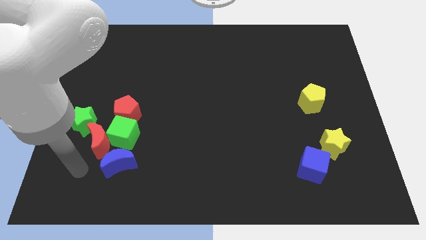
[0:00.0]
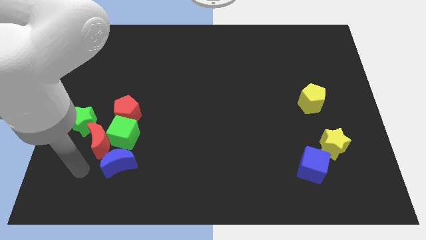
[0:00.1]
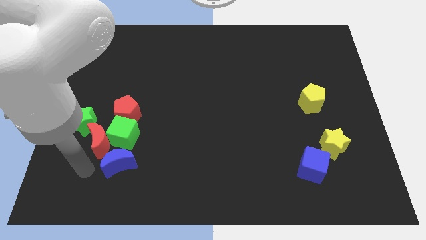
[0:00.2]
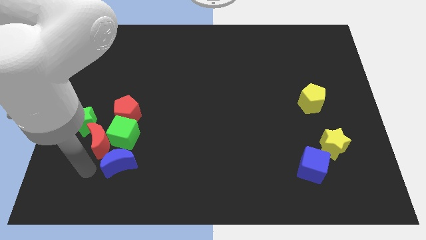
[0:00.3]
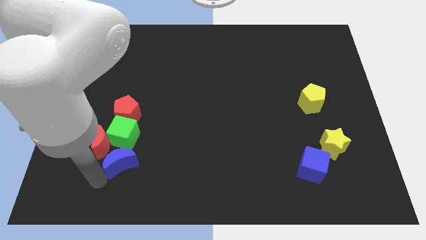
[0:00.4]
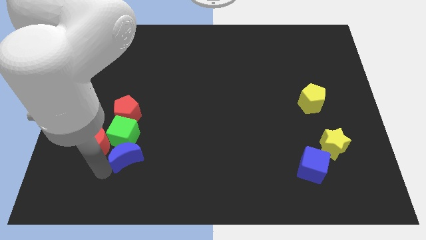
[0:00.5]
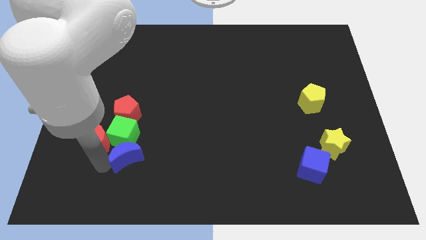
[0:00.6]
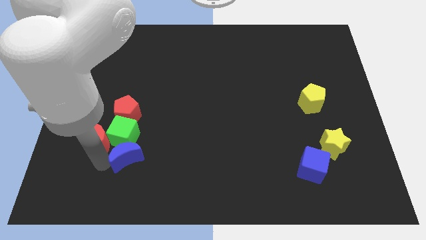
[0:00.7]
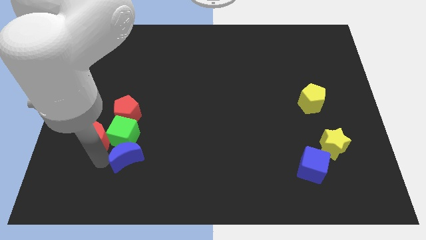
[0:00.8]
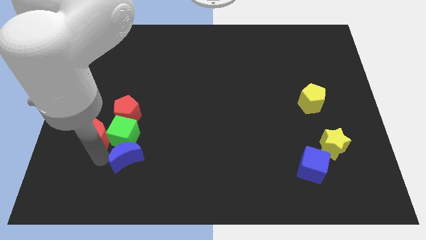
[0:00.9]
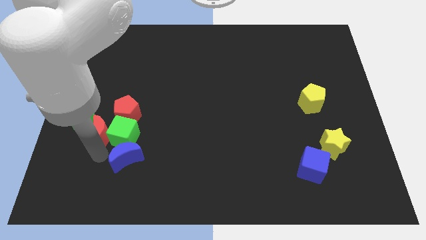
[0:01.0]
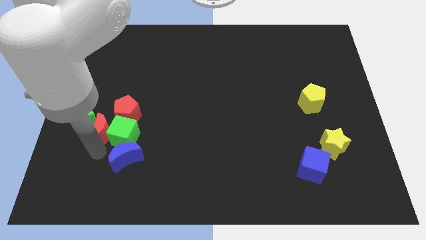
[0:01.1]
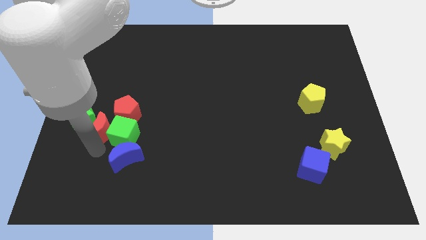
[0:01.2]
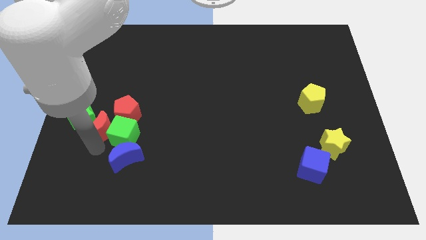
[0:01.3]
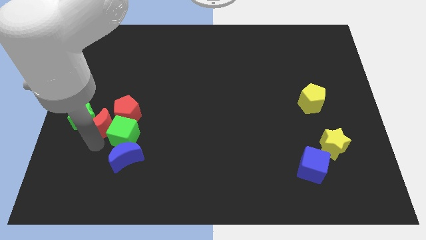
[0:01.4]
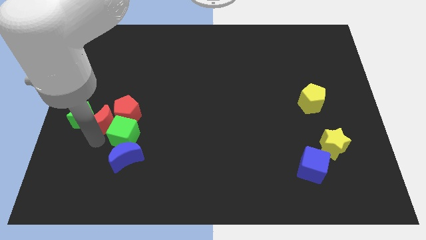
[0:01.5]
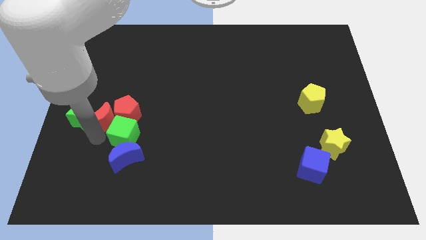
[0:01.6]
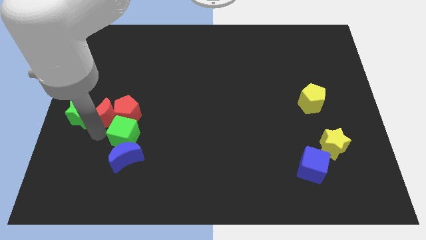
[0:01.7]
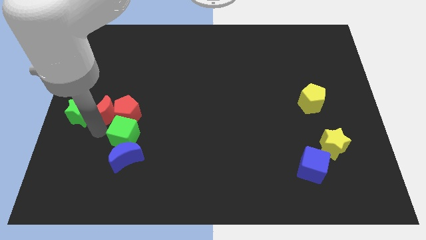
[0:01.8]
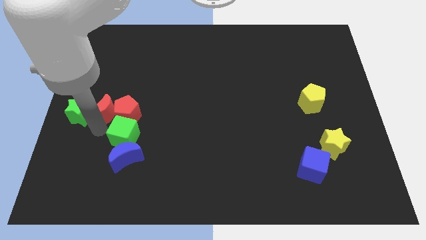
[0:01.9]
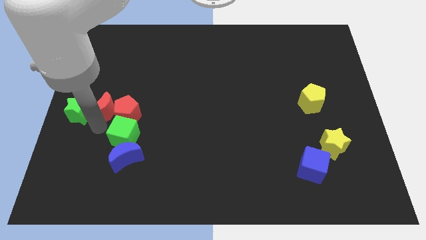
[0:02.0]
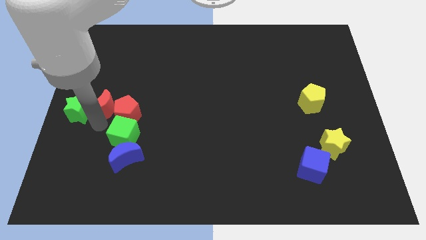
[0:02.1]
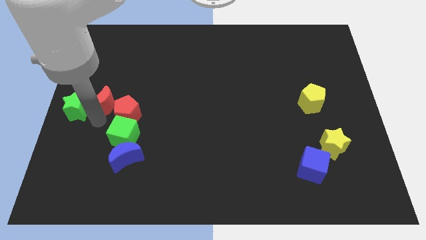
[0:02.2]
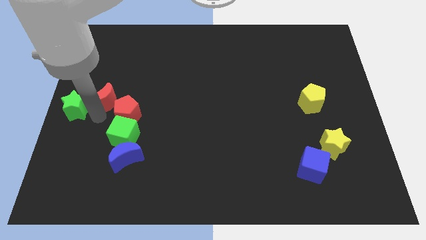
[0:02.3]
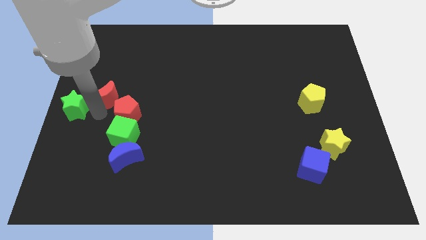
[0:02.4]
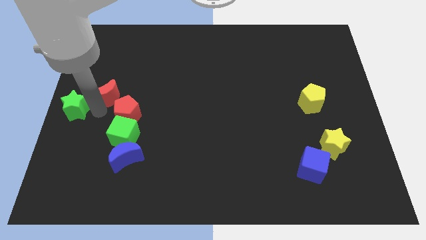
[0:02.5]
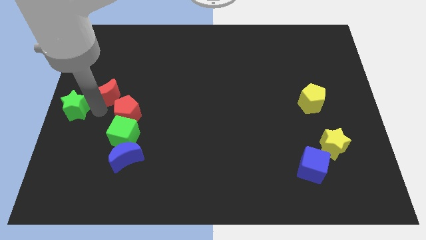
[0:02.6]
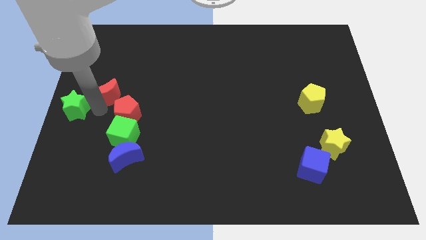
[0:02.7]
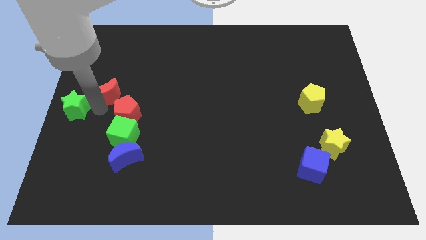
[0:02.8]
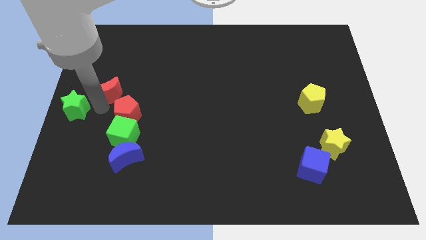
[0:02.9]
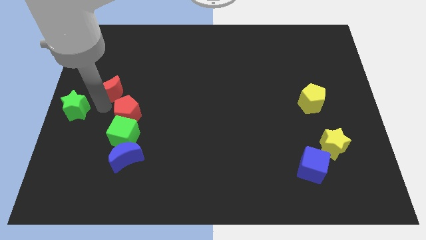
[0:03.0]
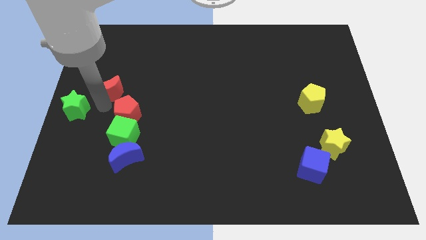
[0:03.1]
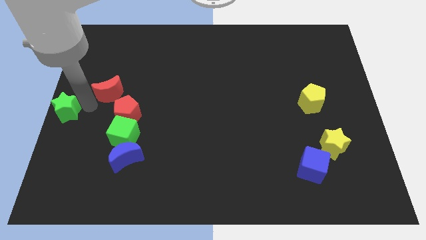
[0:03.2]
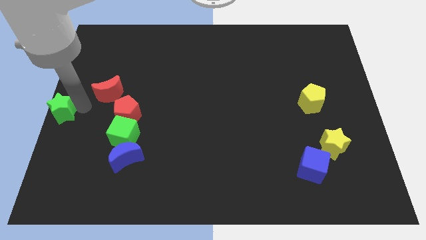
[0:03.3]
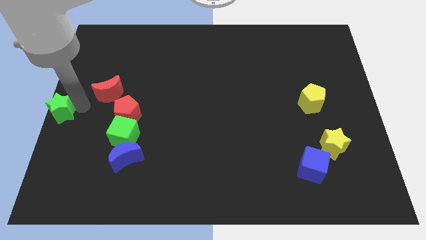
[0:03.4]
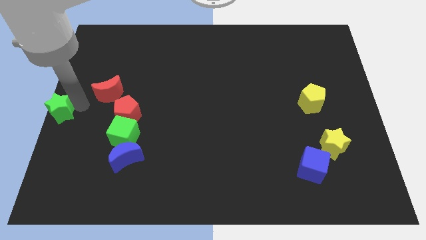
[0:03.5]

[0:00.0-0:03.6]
separate red moon away from green cube push green star to the left center

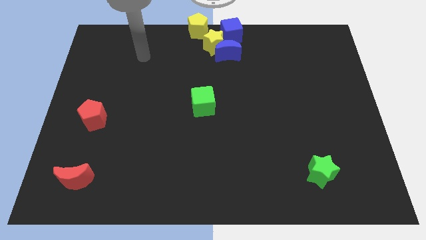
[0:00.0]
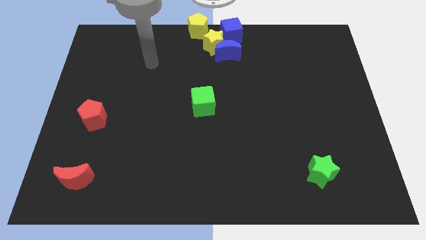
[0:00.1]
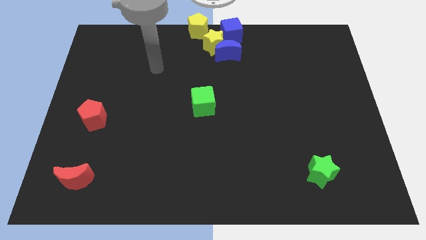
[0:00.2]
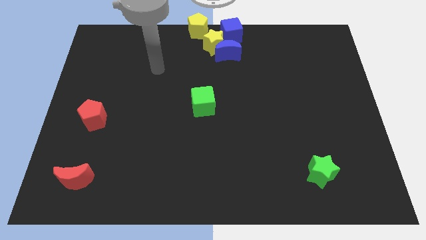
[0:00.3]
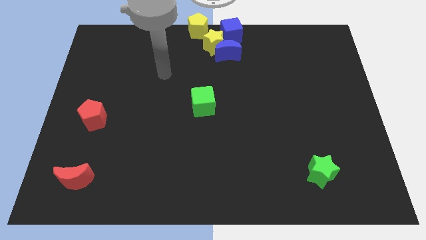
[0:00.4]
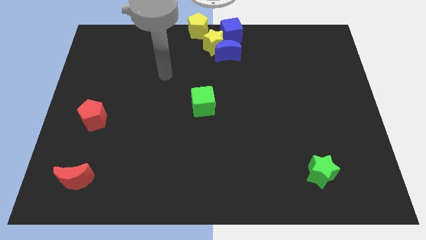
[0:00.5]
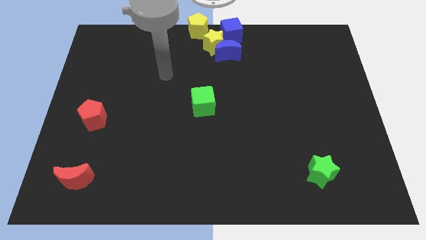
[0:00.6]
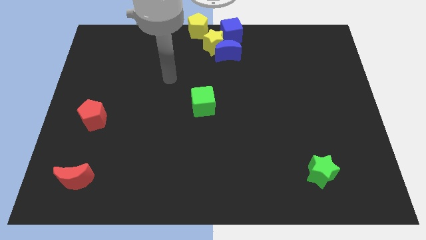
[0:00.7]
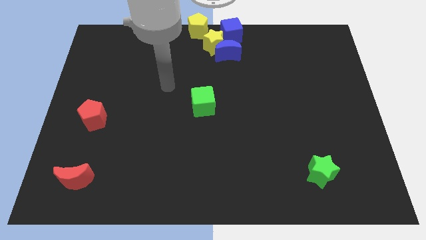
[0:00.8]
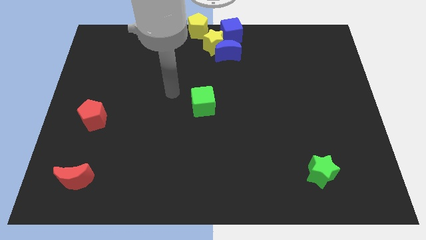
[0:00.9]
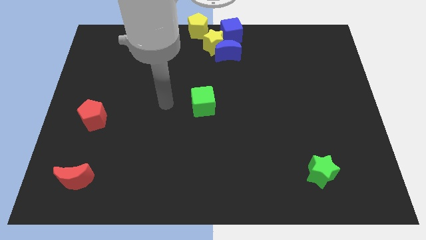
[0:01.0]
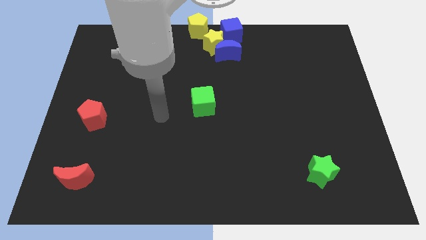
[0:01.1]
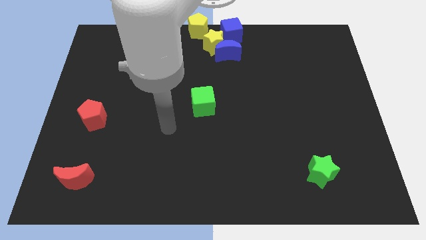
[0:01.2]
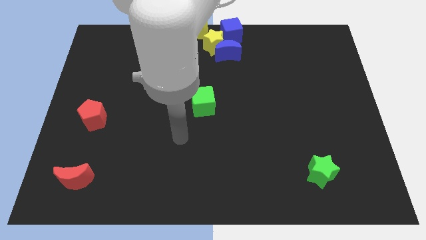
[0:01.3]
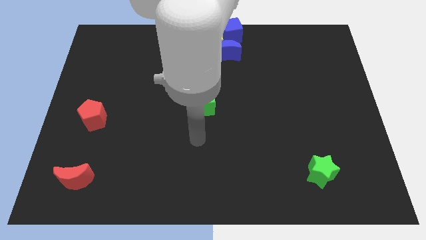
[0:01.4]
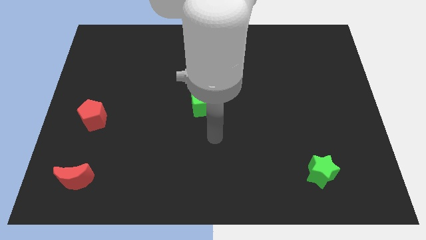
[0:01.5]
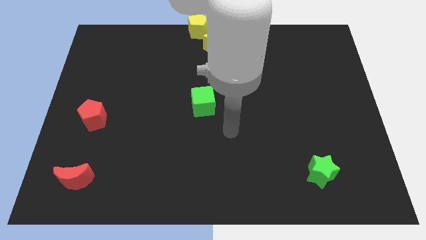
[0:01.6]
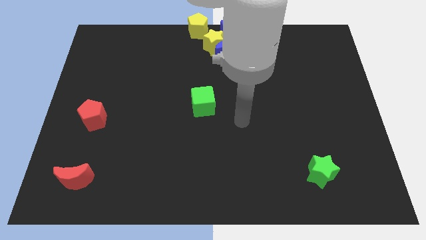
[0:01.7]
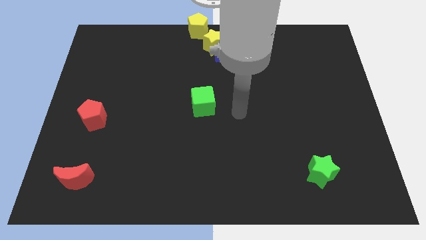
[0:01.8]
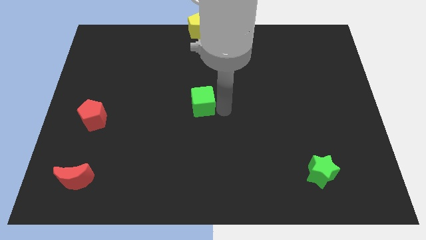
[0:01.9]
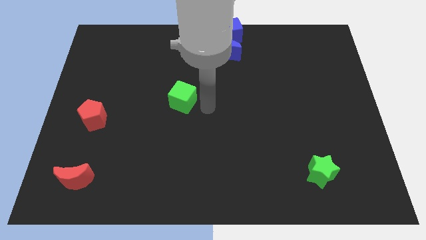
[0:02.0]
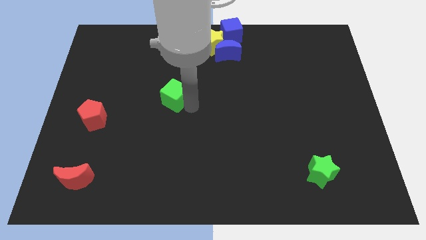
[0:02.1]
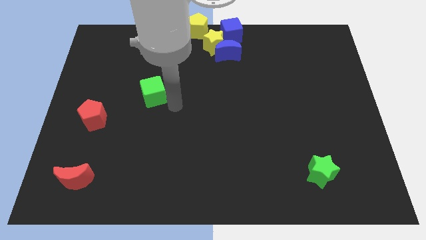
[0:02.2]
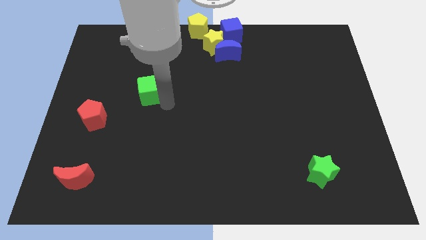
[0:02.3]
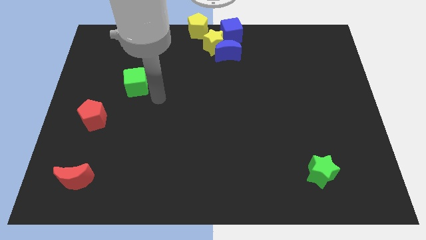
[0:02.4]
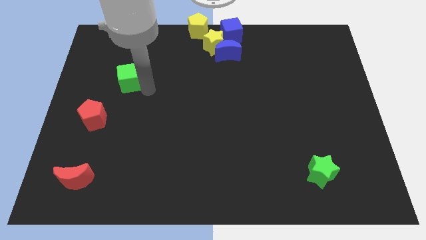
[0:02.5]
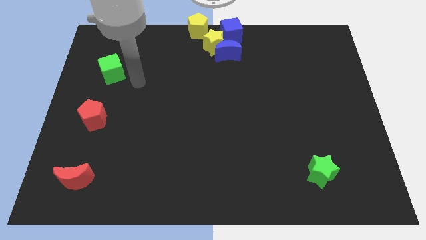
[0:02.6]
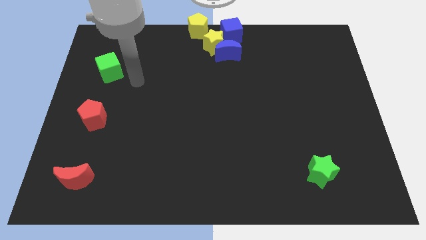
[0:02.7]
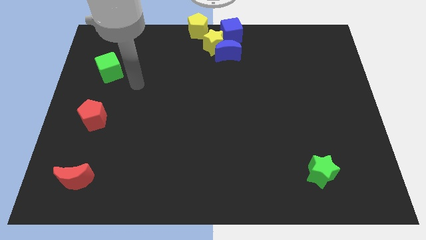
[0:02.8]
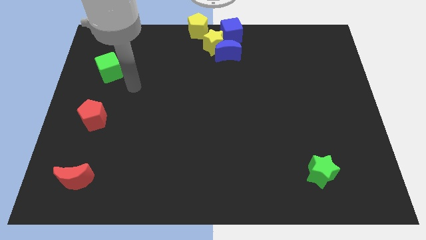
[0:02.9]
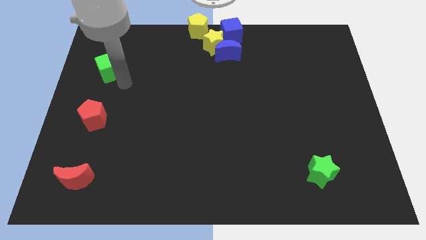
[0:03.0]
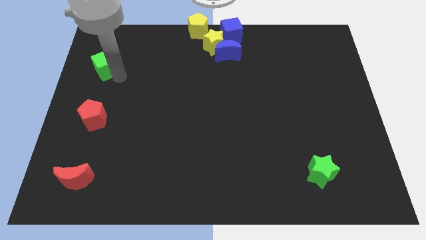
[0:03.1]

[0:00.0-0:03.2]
push green cube above red pentagon

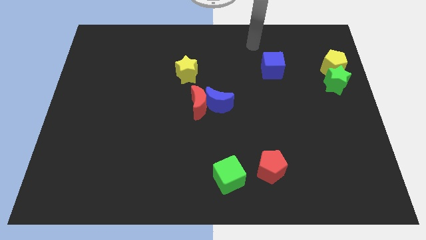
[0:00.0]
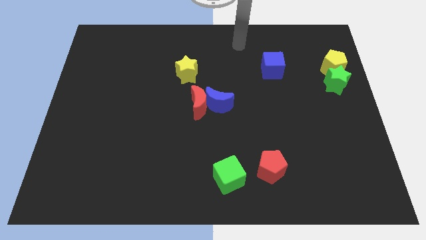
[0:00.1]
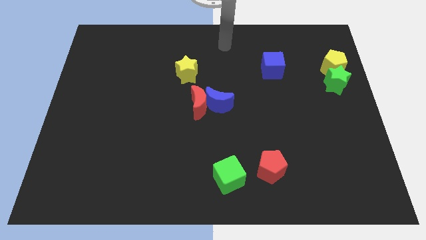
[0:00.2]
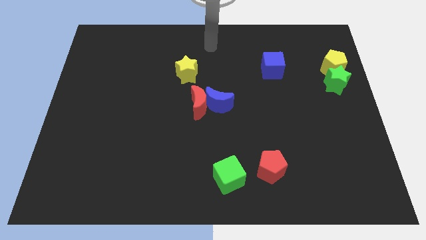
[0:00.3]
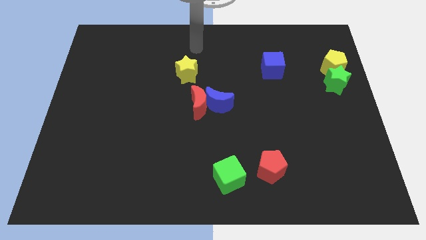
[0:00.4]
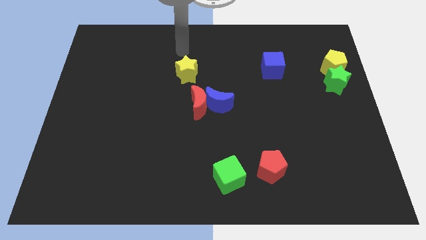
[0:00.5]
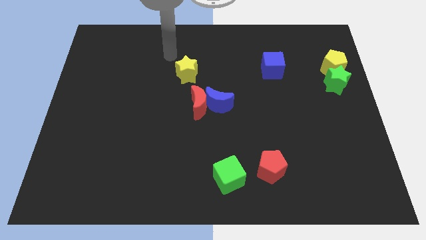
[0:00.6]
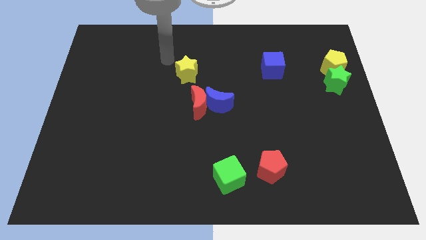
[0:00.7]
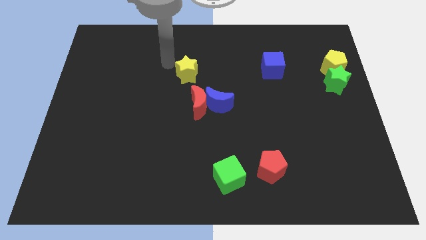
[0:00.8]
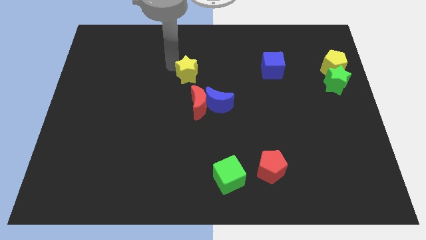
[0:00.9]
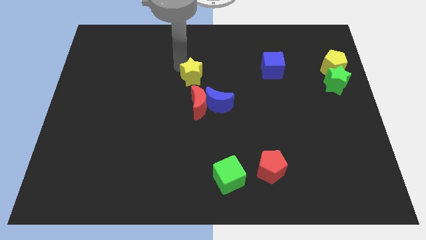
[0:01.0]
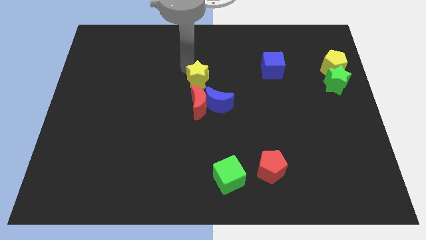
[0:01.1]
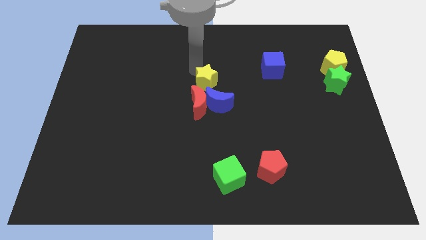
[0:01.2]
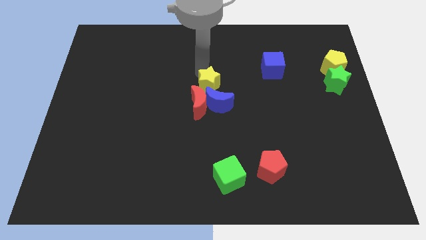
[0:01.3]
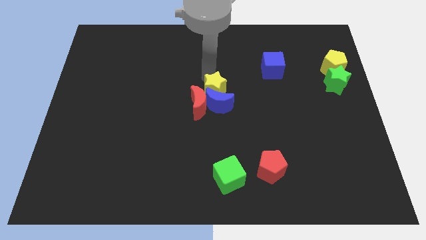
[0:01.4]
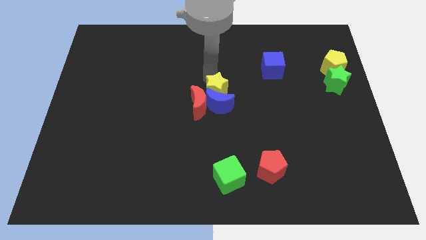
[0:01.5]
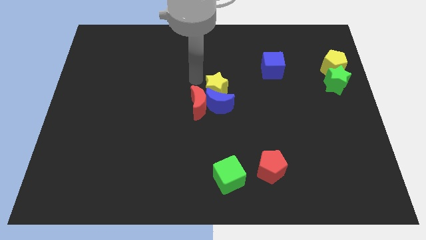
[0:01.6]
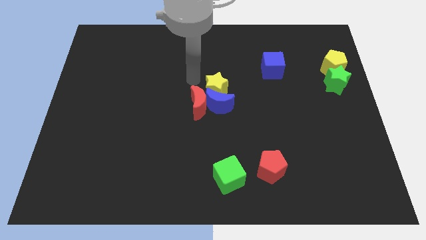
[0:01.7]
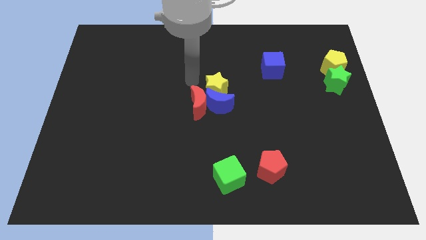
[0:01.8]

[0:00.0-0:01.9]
put the yellow star into the blue moon

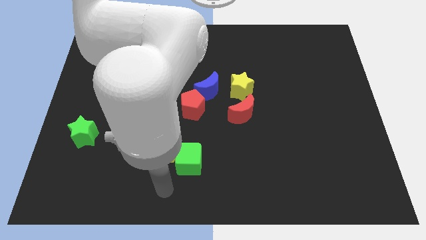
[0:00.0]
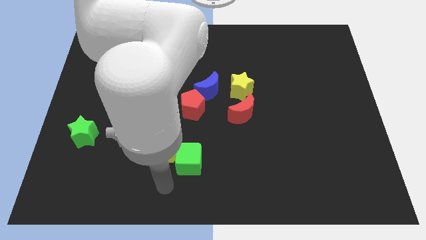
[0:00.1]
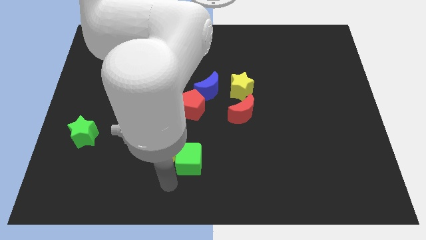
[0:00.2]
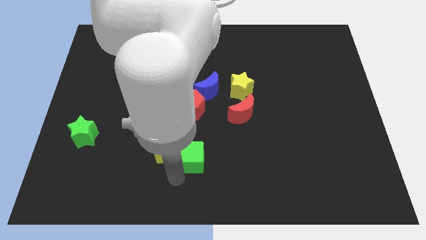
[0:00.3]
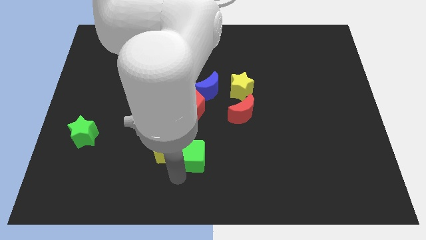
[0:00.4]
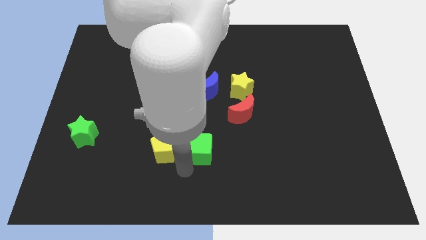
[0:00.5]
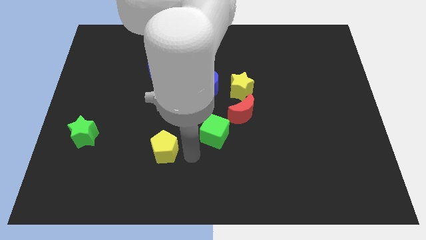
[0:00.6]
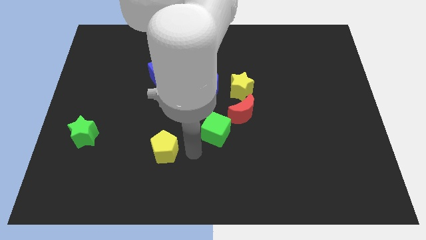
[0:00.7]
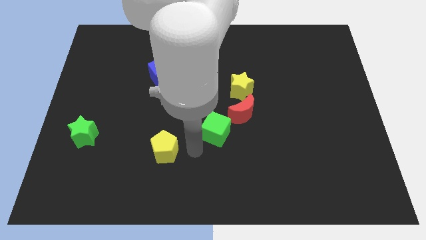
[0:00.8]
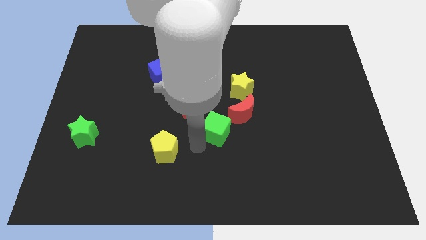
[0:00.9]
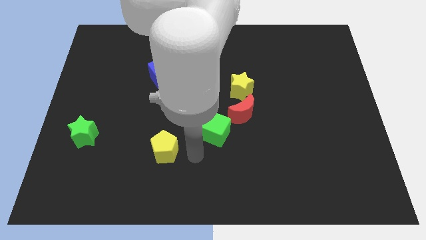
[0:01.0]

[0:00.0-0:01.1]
push green cube towards red moon
